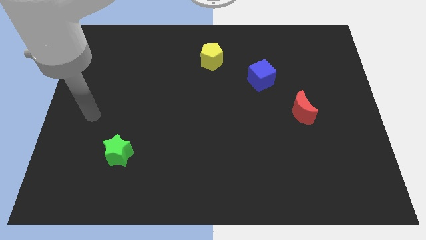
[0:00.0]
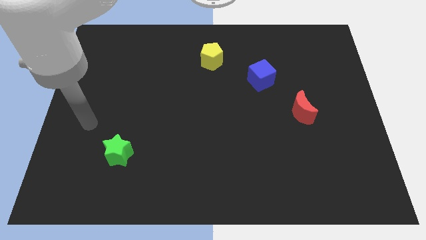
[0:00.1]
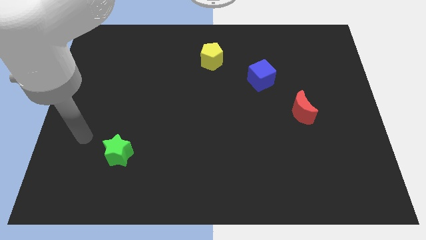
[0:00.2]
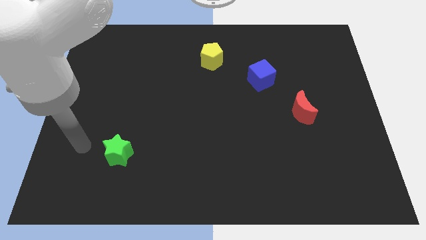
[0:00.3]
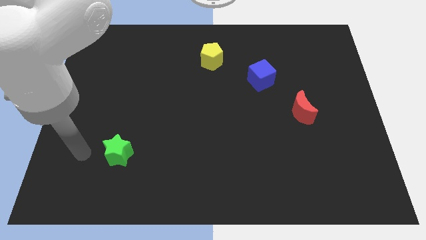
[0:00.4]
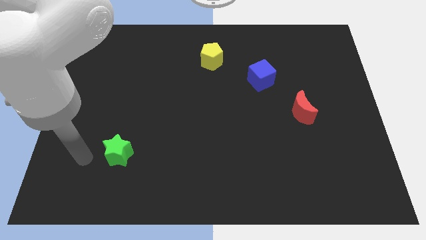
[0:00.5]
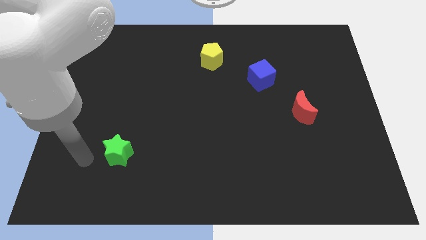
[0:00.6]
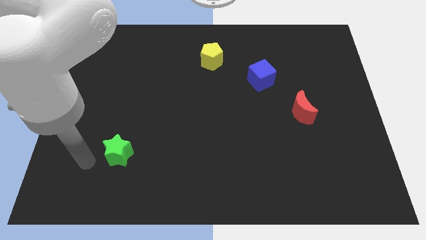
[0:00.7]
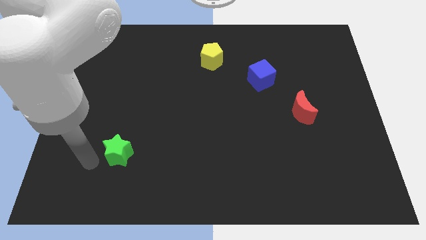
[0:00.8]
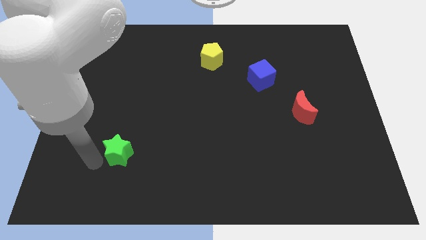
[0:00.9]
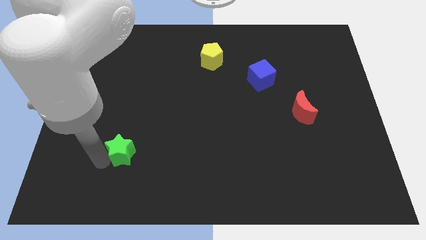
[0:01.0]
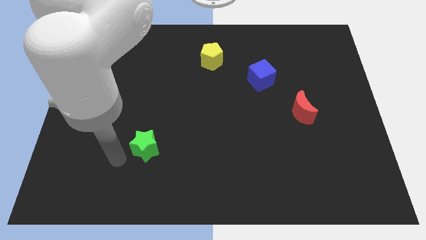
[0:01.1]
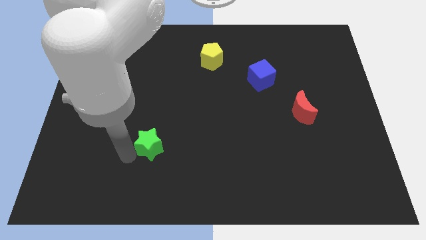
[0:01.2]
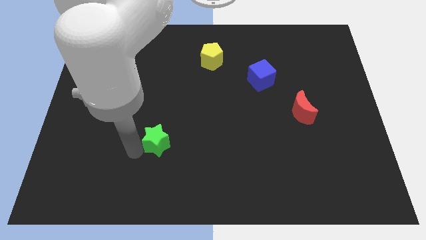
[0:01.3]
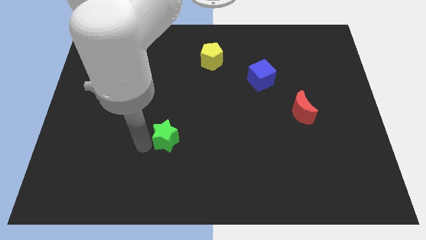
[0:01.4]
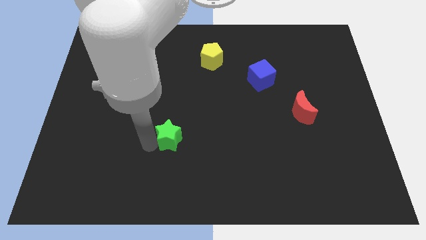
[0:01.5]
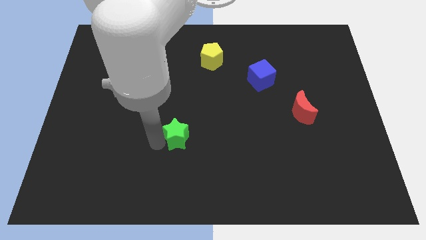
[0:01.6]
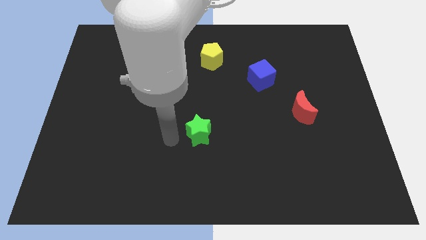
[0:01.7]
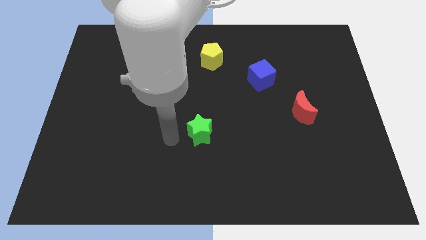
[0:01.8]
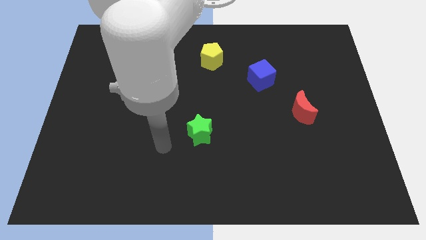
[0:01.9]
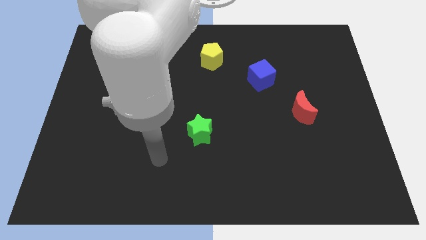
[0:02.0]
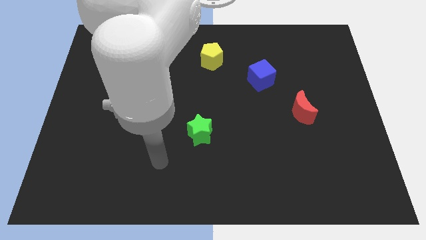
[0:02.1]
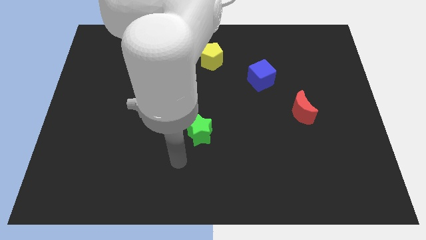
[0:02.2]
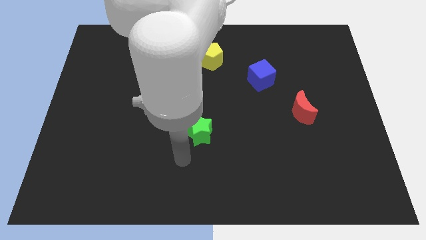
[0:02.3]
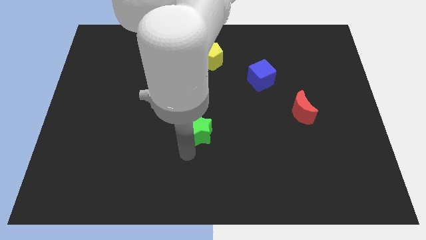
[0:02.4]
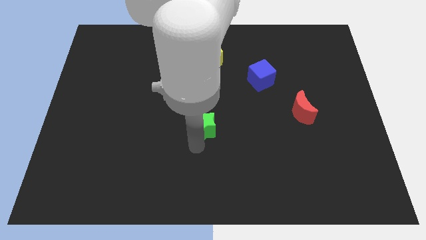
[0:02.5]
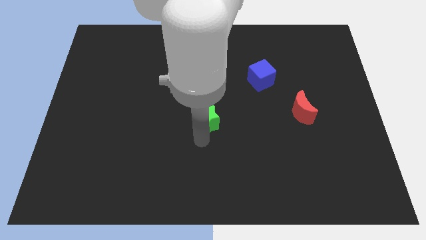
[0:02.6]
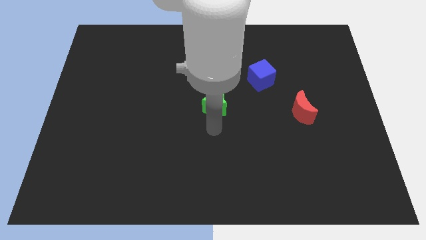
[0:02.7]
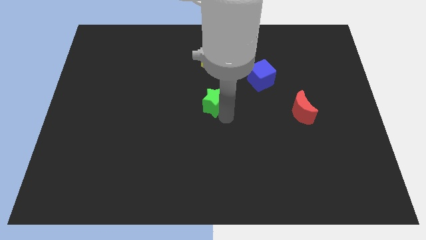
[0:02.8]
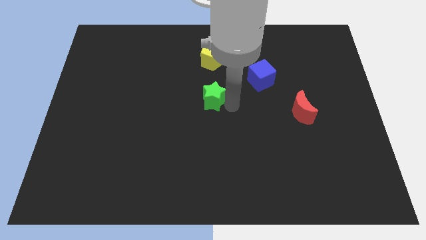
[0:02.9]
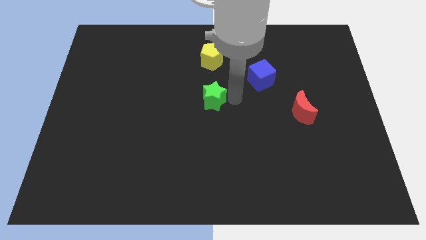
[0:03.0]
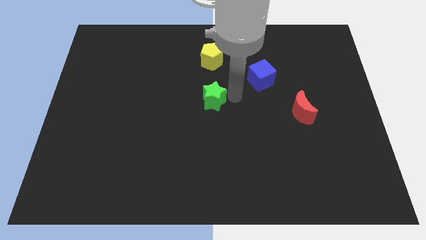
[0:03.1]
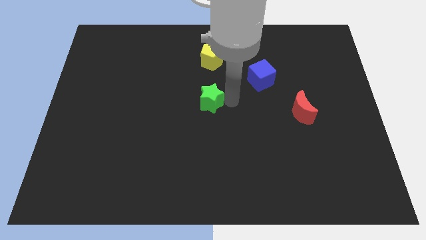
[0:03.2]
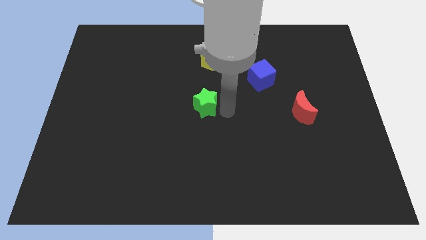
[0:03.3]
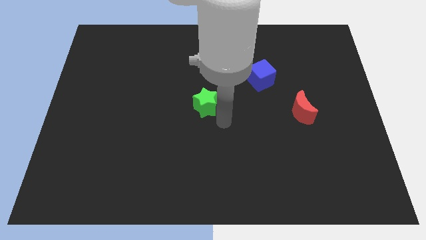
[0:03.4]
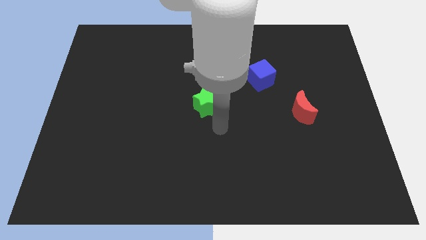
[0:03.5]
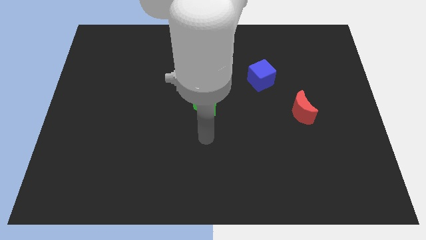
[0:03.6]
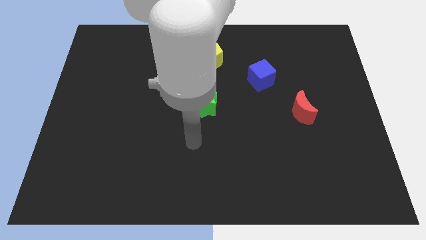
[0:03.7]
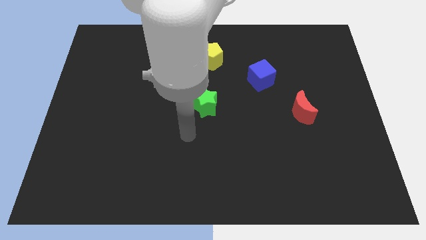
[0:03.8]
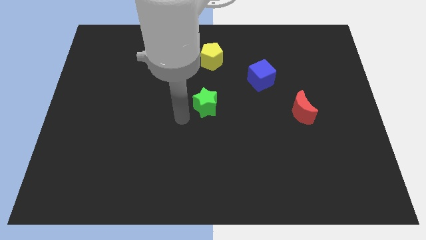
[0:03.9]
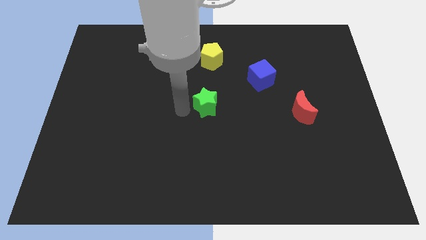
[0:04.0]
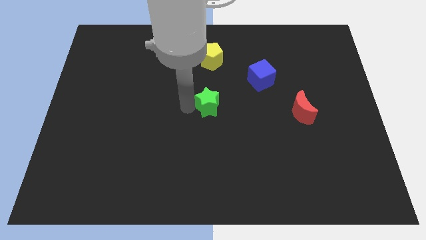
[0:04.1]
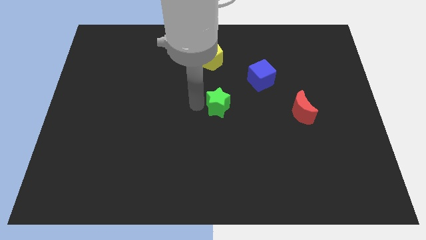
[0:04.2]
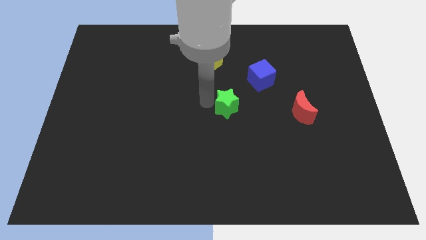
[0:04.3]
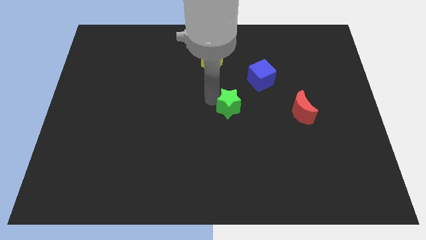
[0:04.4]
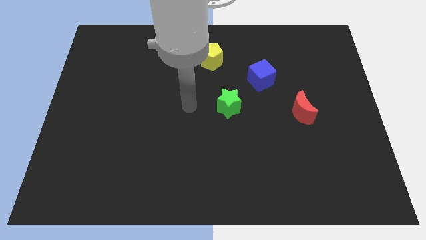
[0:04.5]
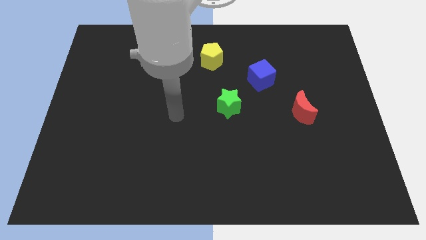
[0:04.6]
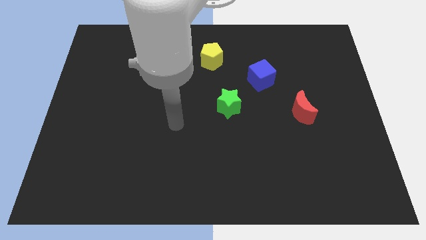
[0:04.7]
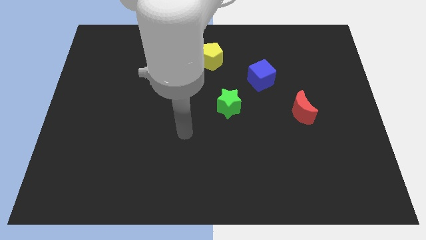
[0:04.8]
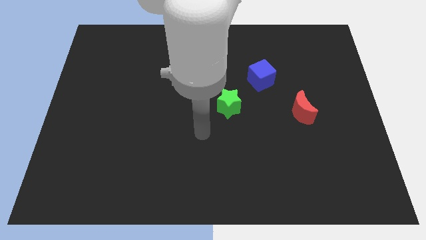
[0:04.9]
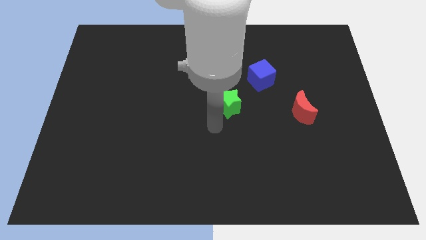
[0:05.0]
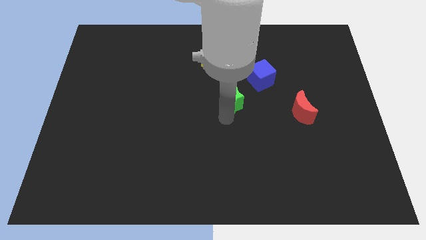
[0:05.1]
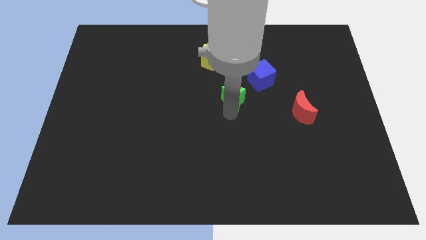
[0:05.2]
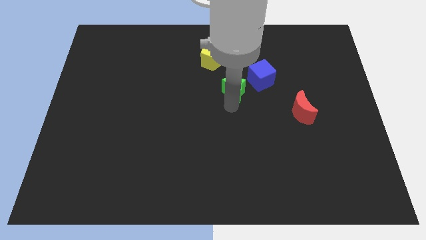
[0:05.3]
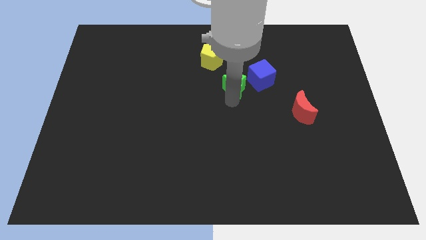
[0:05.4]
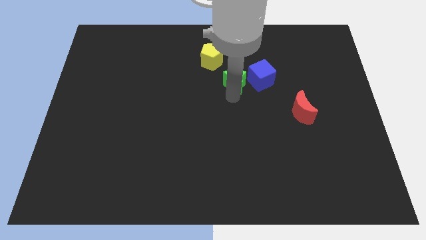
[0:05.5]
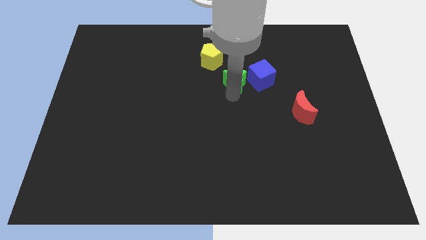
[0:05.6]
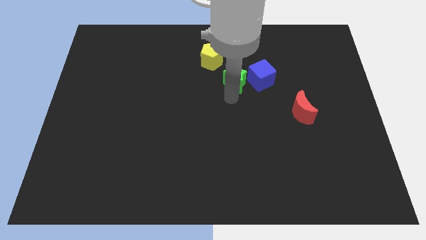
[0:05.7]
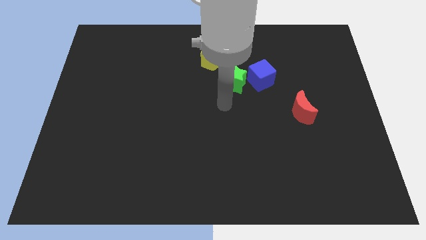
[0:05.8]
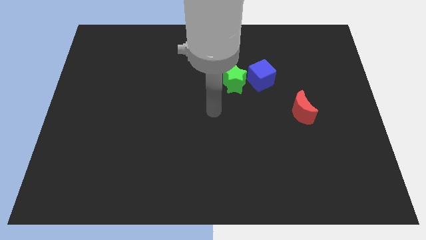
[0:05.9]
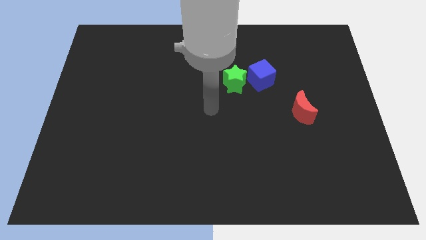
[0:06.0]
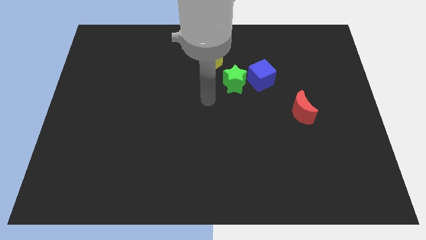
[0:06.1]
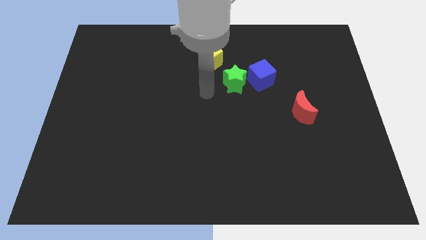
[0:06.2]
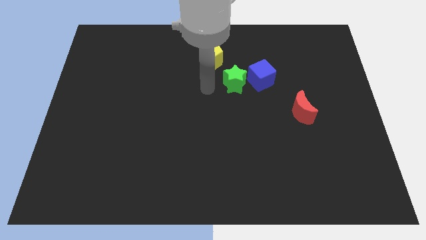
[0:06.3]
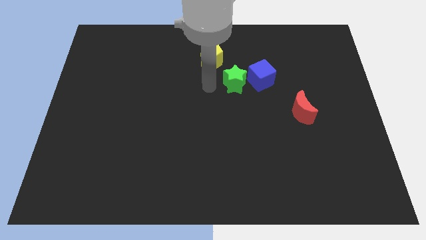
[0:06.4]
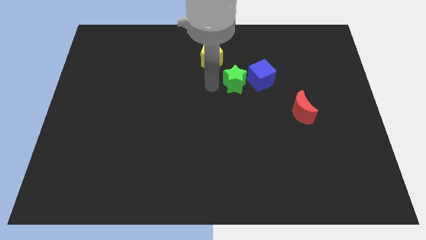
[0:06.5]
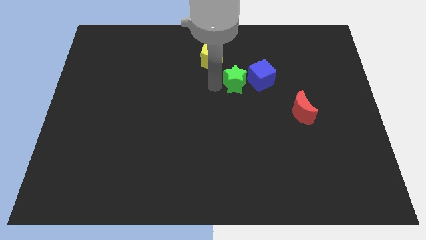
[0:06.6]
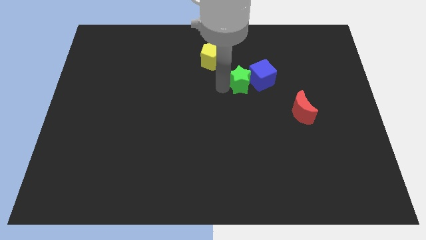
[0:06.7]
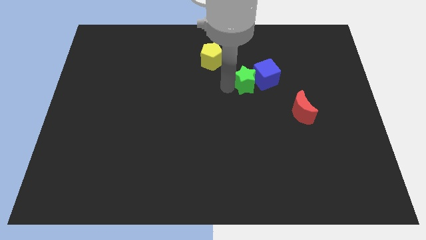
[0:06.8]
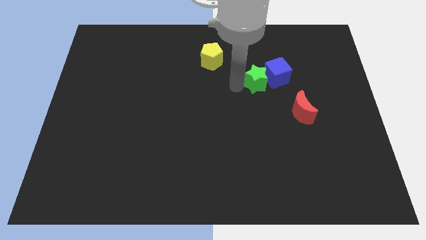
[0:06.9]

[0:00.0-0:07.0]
slide the green block close to the cube

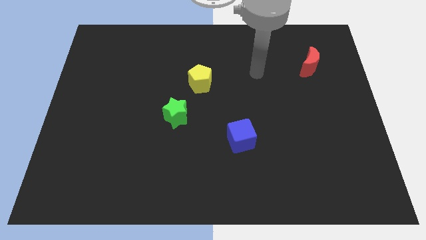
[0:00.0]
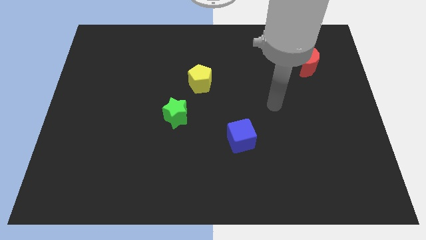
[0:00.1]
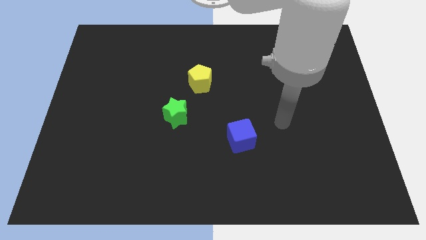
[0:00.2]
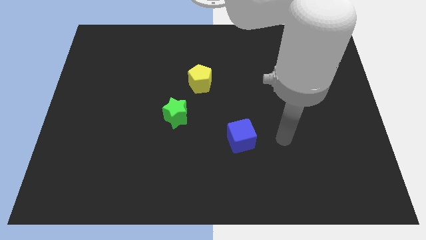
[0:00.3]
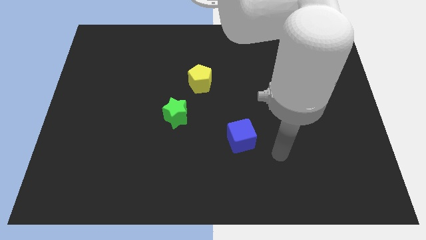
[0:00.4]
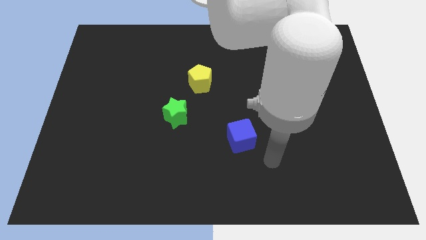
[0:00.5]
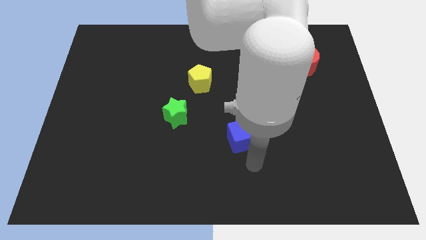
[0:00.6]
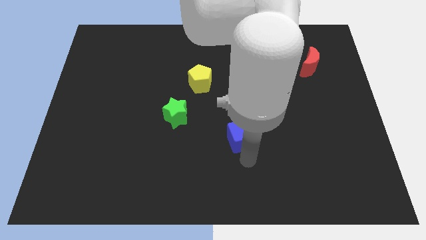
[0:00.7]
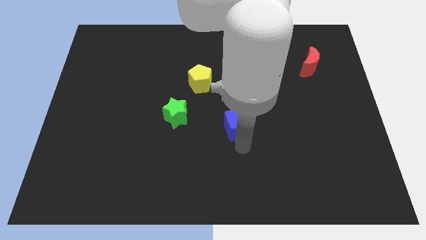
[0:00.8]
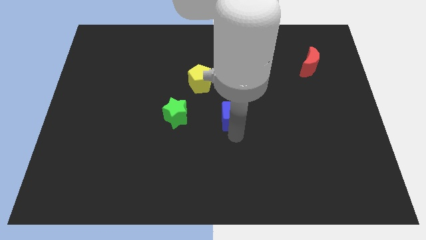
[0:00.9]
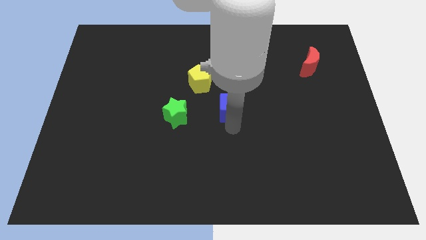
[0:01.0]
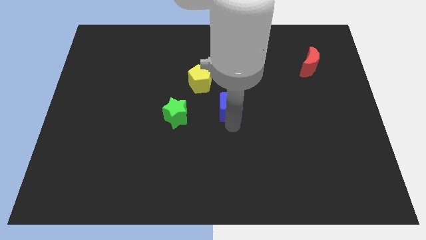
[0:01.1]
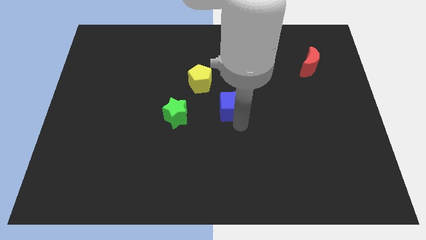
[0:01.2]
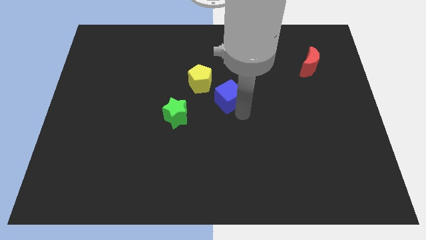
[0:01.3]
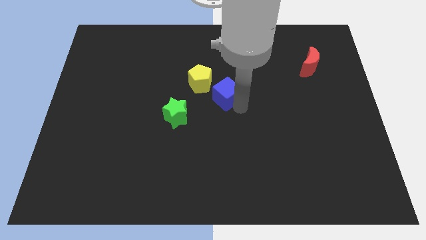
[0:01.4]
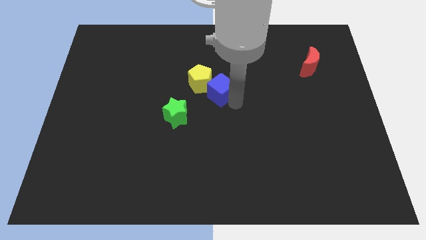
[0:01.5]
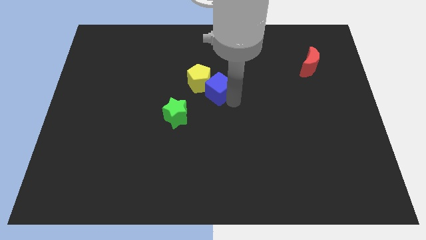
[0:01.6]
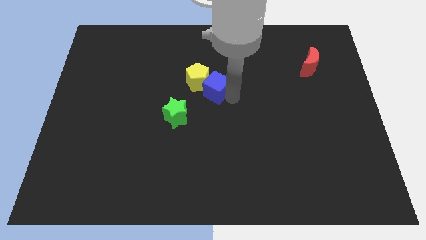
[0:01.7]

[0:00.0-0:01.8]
slide the cube next to the yellow block
